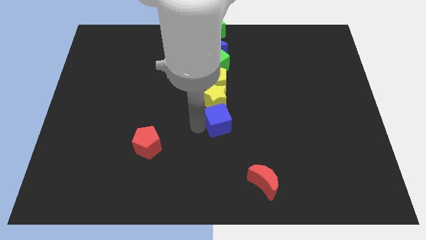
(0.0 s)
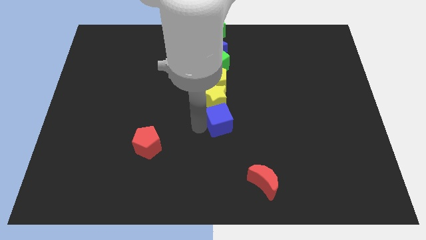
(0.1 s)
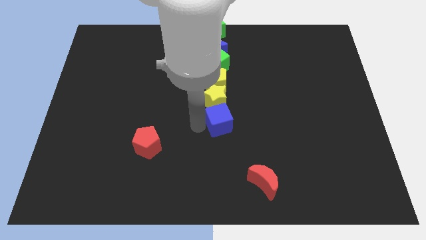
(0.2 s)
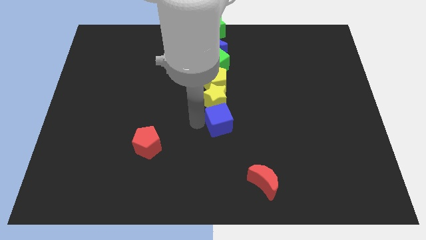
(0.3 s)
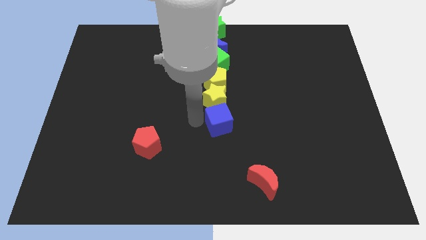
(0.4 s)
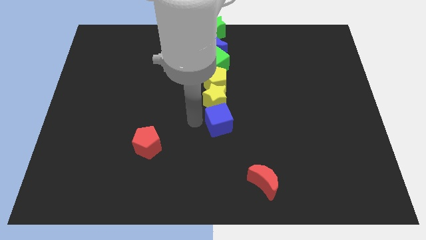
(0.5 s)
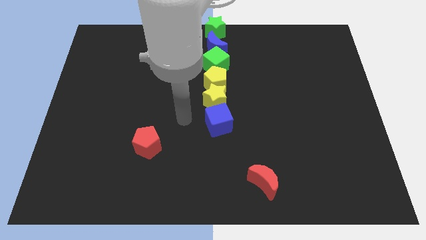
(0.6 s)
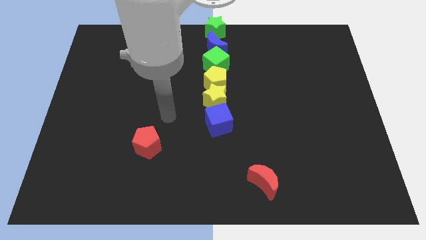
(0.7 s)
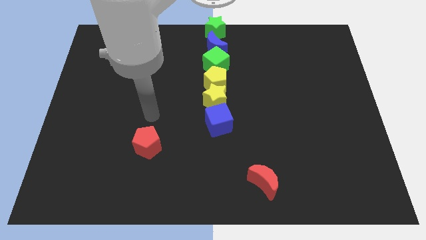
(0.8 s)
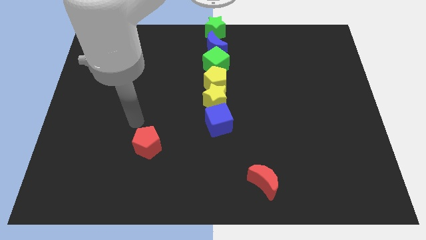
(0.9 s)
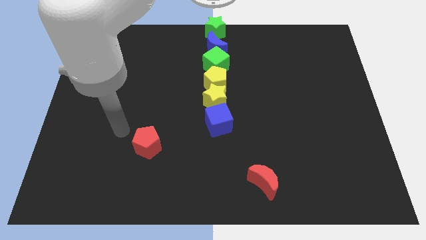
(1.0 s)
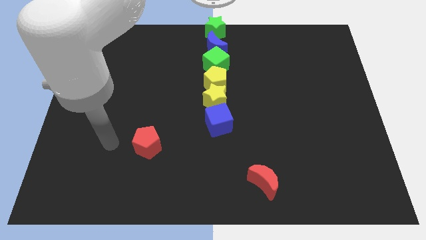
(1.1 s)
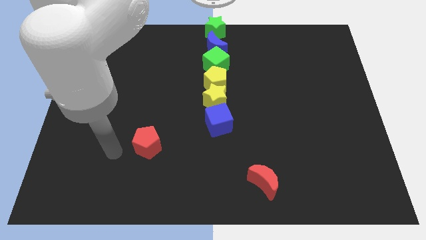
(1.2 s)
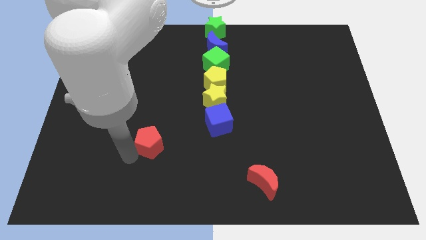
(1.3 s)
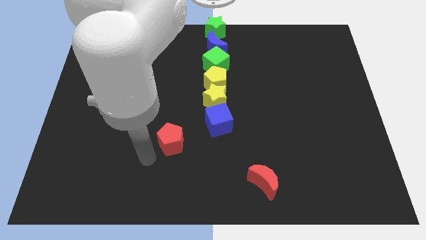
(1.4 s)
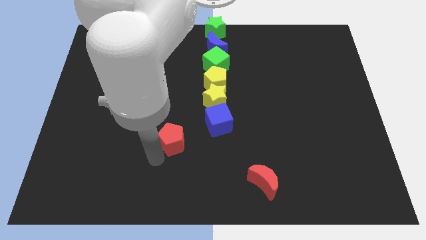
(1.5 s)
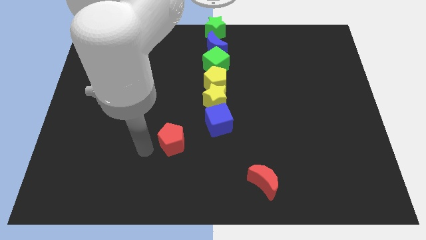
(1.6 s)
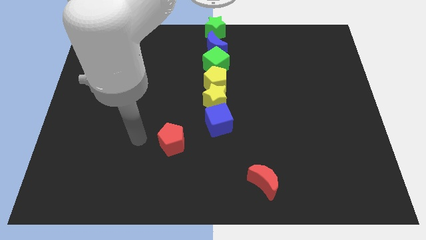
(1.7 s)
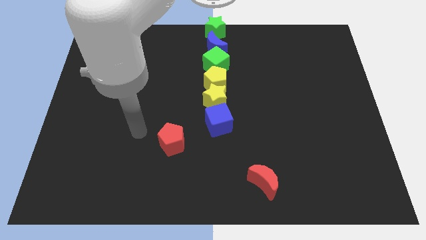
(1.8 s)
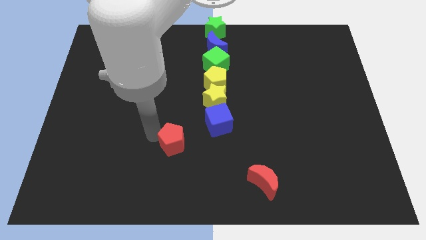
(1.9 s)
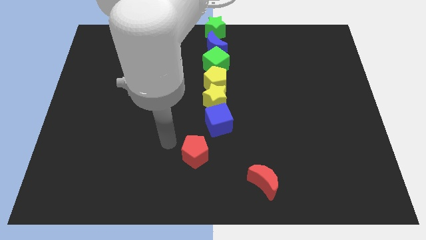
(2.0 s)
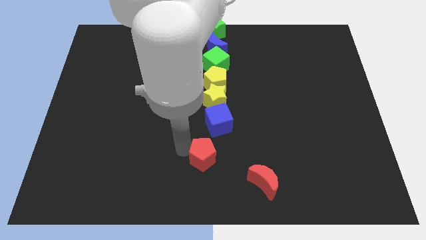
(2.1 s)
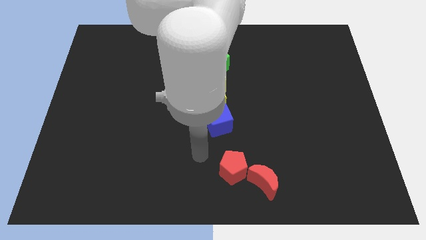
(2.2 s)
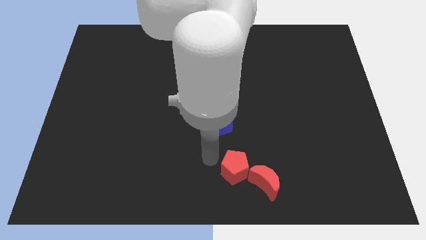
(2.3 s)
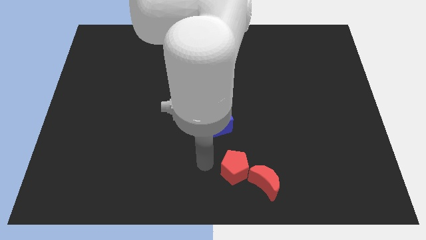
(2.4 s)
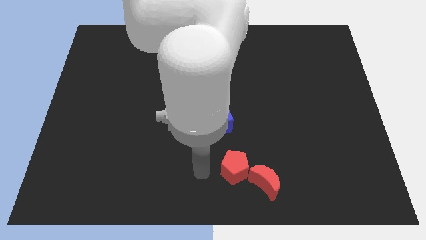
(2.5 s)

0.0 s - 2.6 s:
move the red pentagon to the top left of the red crescent

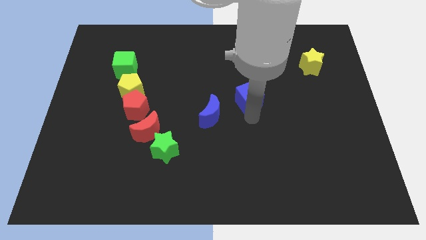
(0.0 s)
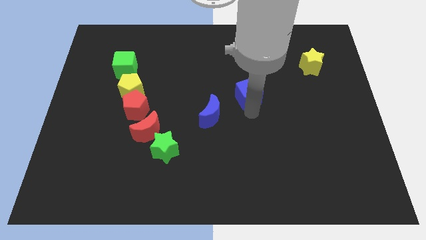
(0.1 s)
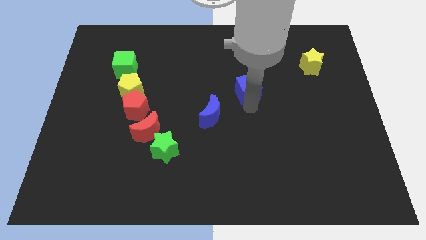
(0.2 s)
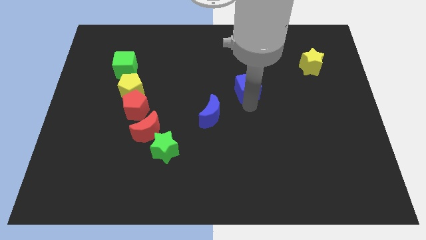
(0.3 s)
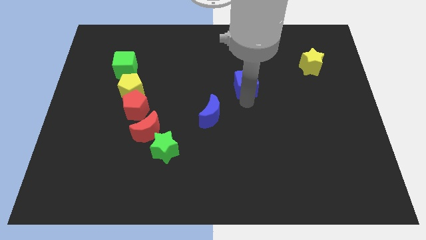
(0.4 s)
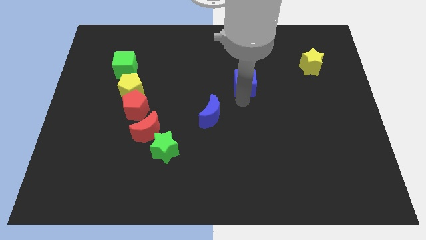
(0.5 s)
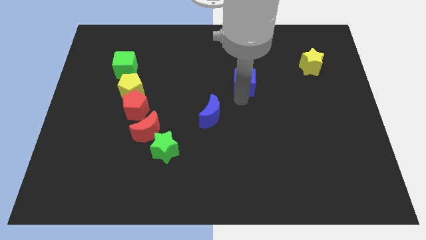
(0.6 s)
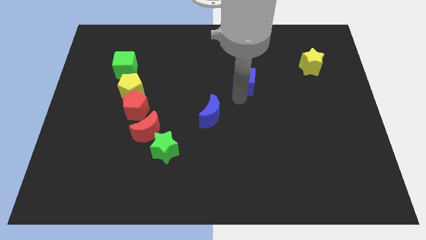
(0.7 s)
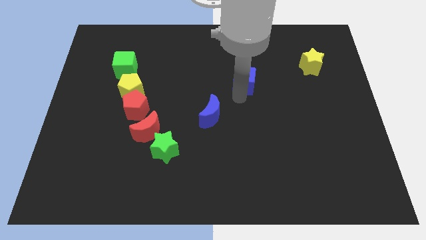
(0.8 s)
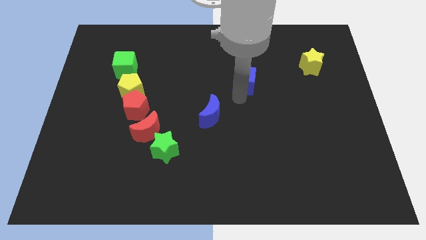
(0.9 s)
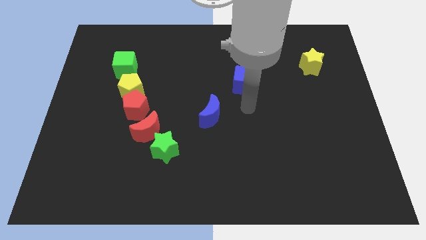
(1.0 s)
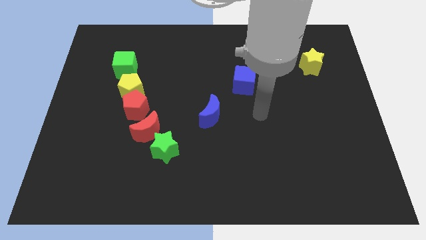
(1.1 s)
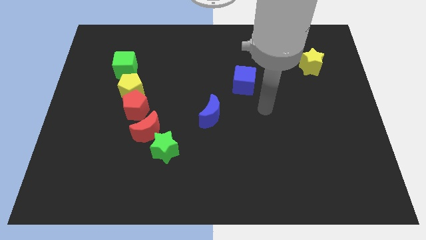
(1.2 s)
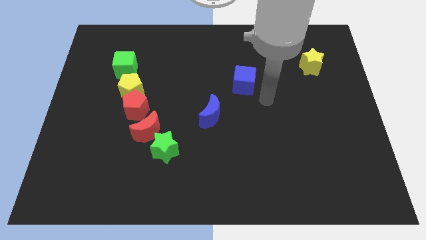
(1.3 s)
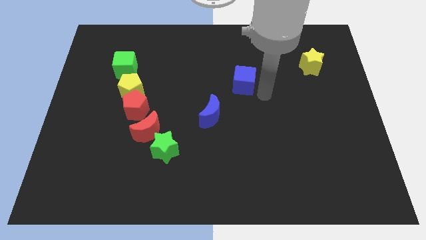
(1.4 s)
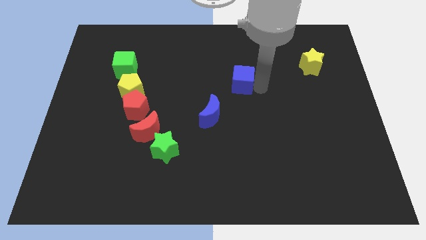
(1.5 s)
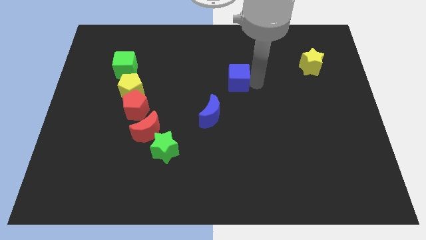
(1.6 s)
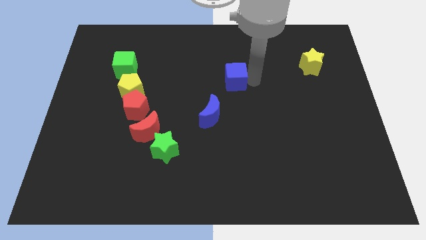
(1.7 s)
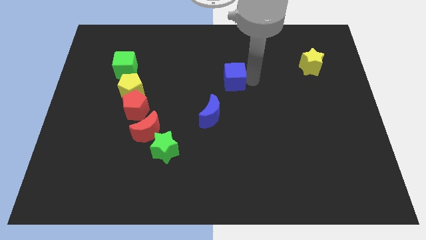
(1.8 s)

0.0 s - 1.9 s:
push blue cube slightly towards upwards

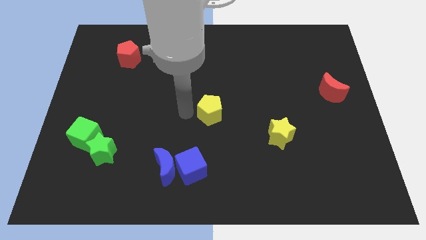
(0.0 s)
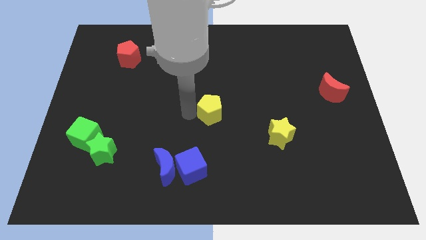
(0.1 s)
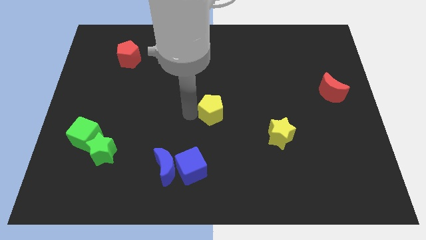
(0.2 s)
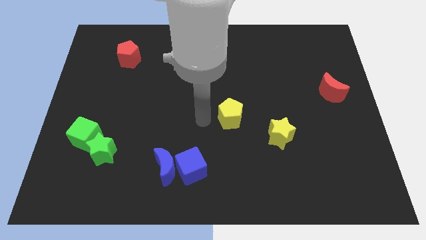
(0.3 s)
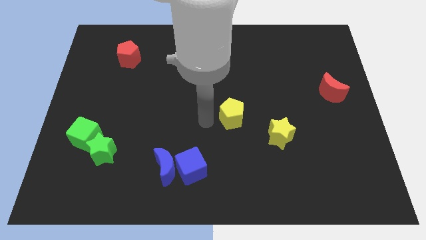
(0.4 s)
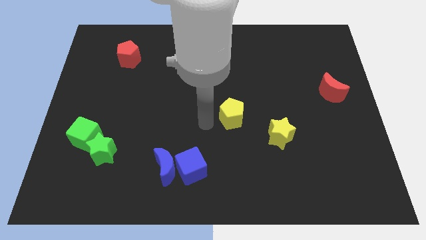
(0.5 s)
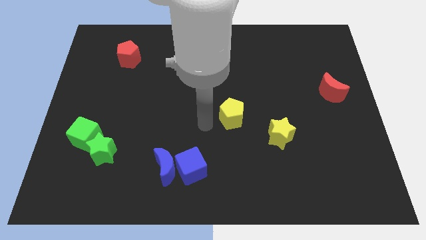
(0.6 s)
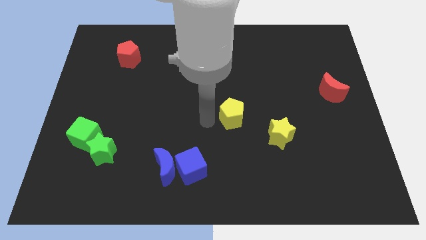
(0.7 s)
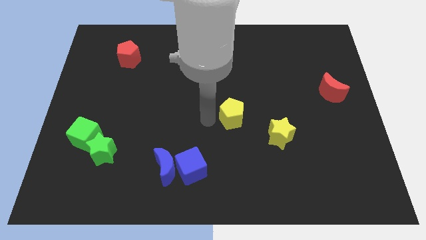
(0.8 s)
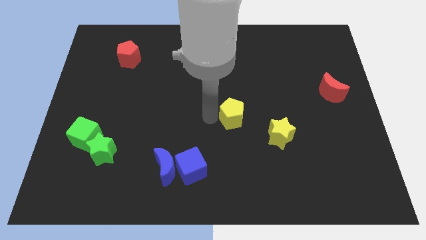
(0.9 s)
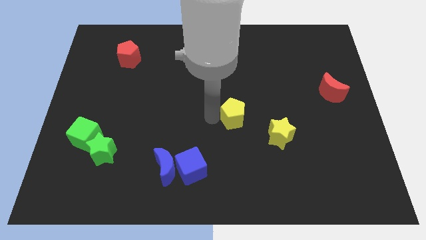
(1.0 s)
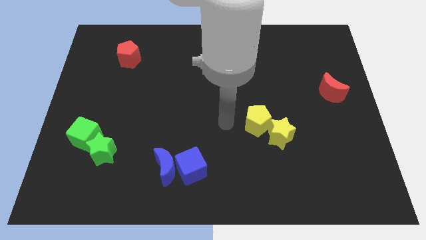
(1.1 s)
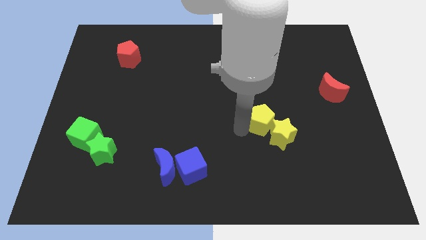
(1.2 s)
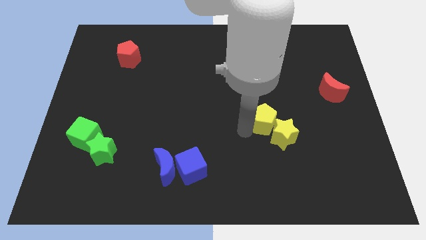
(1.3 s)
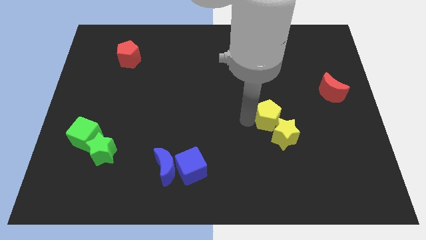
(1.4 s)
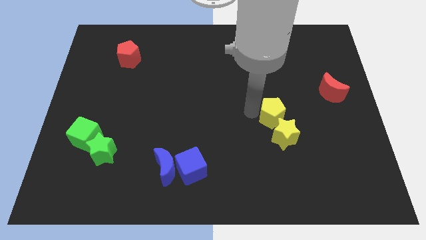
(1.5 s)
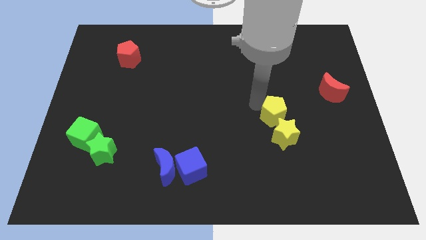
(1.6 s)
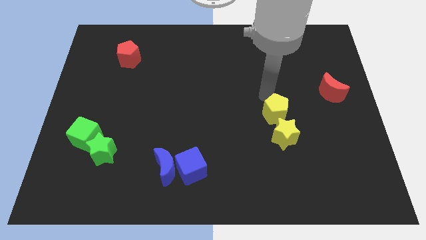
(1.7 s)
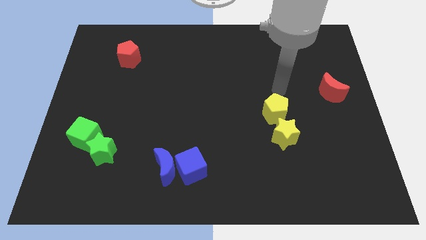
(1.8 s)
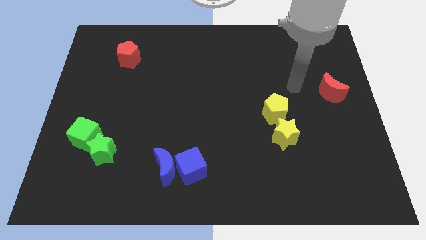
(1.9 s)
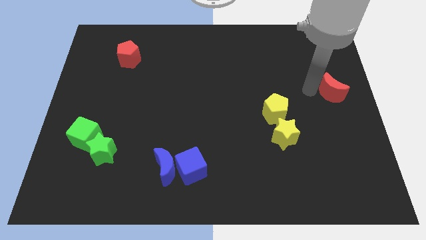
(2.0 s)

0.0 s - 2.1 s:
slide yellow pentagon into yellow star

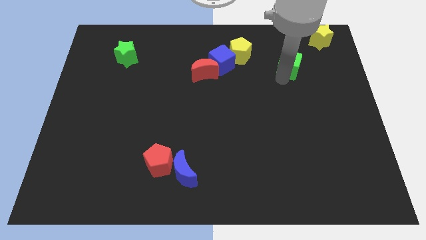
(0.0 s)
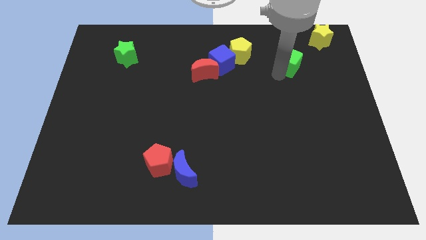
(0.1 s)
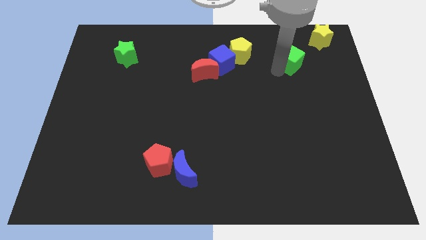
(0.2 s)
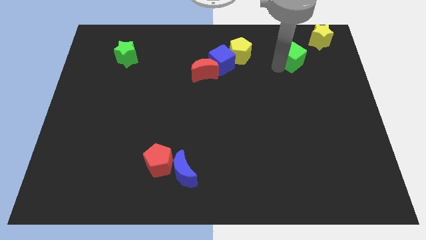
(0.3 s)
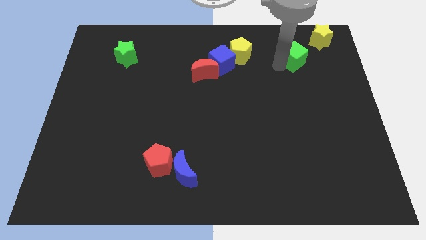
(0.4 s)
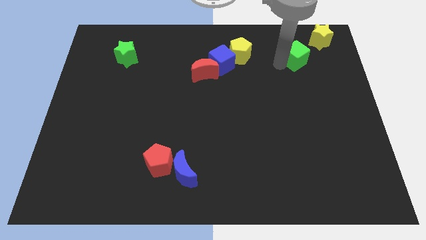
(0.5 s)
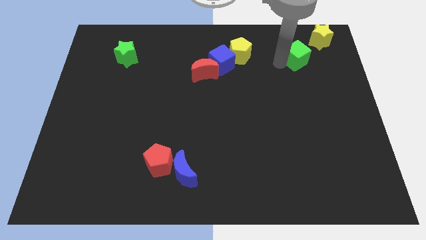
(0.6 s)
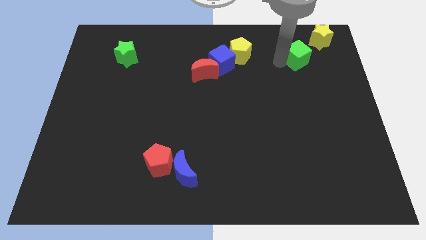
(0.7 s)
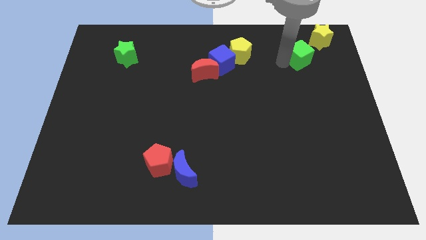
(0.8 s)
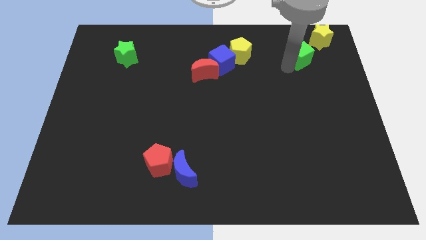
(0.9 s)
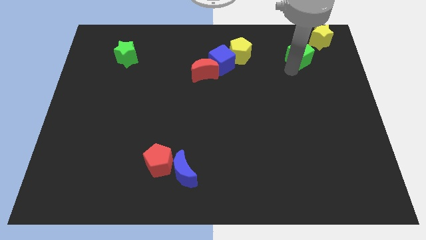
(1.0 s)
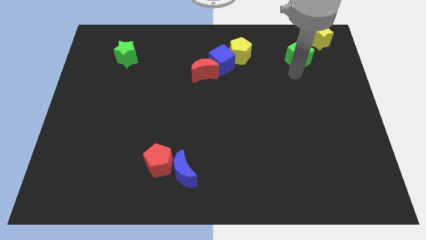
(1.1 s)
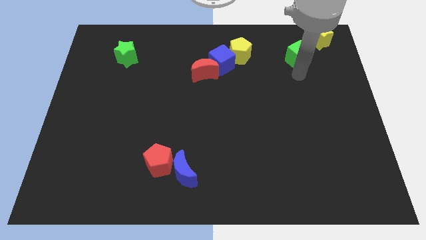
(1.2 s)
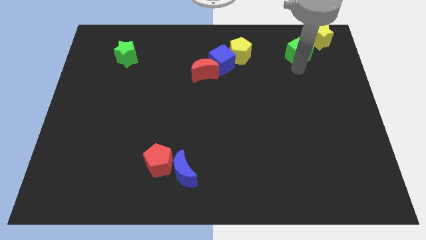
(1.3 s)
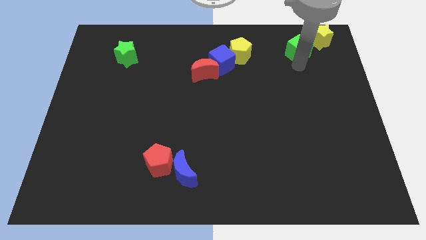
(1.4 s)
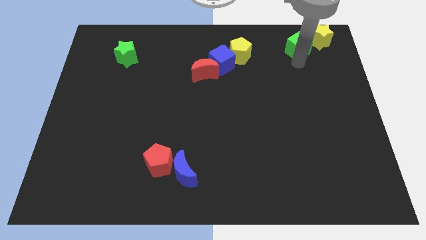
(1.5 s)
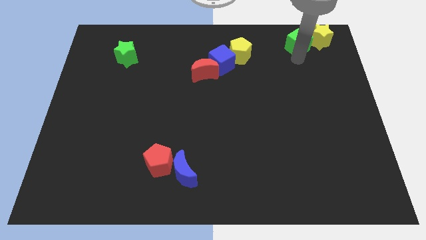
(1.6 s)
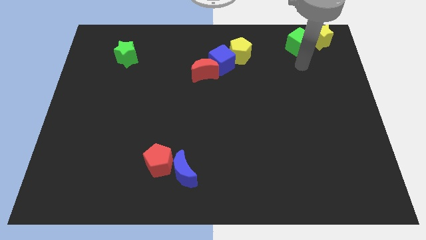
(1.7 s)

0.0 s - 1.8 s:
place the green cube into the yellow star

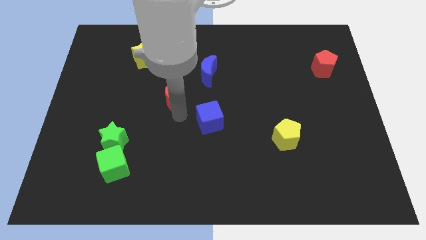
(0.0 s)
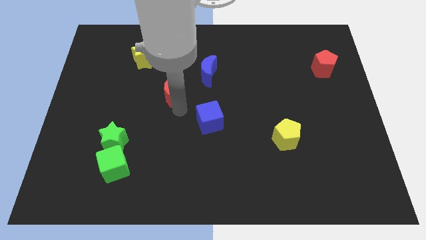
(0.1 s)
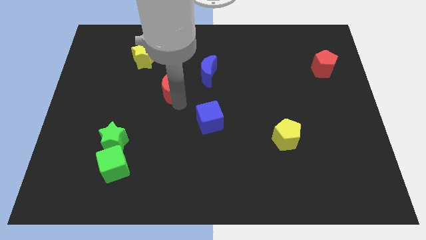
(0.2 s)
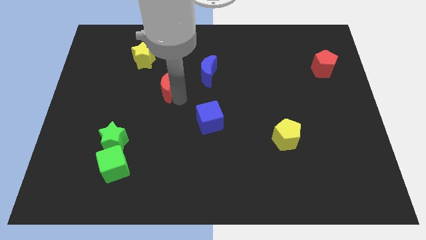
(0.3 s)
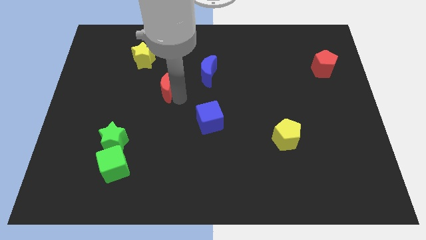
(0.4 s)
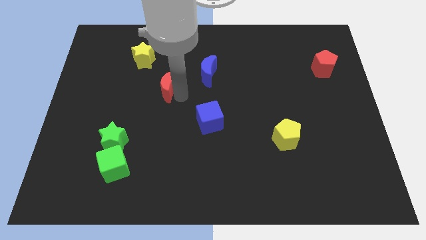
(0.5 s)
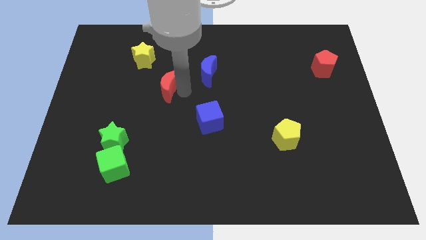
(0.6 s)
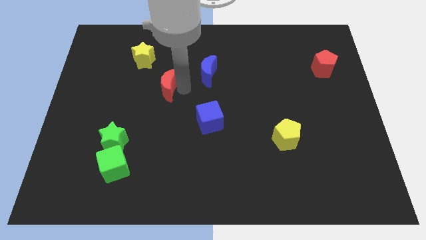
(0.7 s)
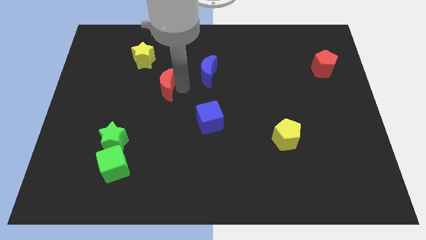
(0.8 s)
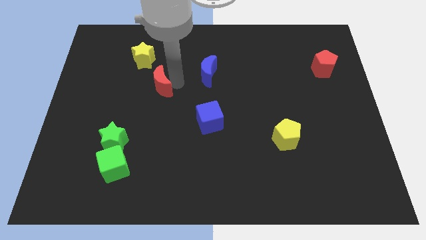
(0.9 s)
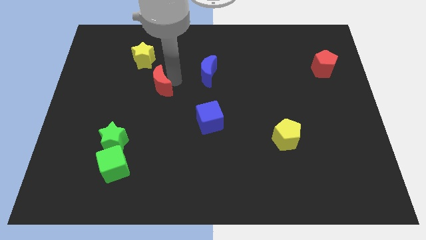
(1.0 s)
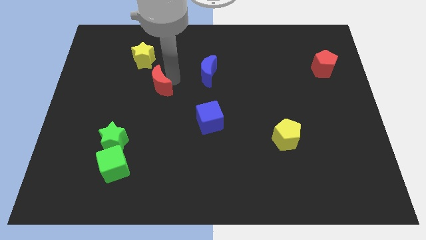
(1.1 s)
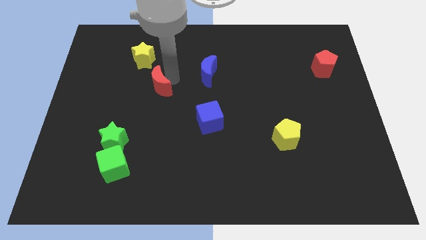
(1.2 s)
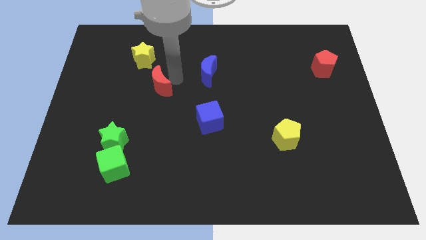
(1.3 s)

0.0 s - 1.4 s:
move the red crescent towards the yellow star
